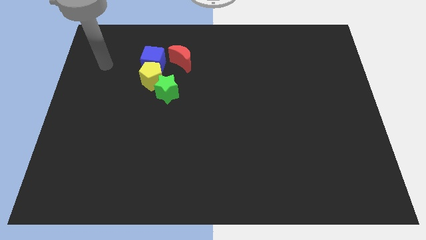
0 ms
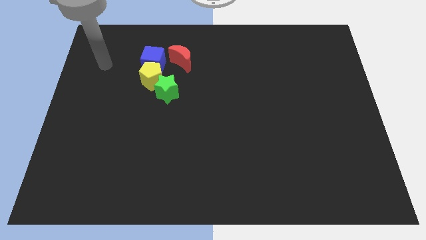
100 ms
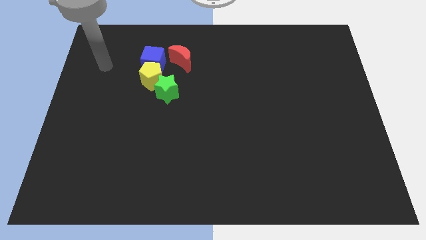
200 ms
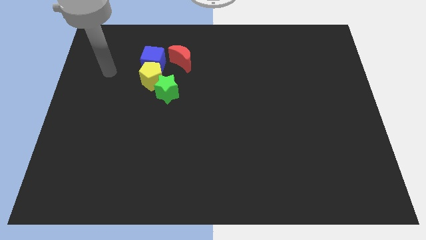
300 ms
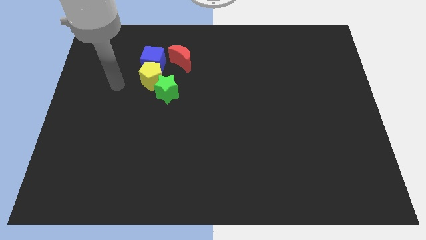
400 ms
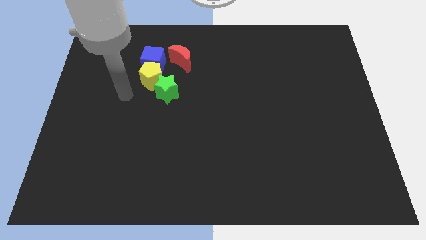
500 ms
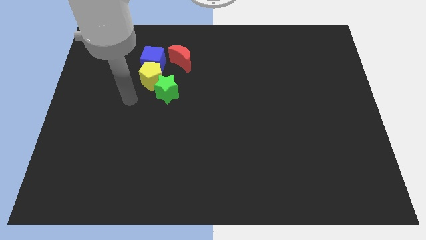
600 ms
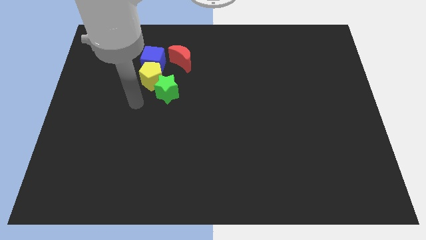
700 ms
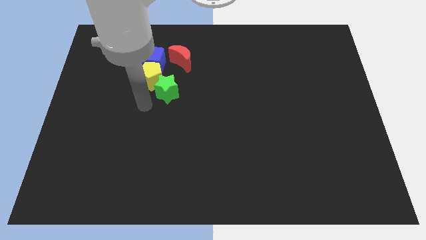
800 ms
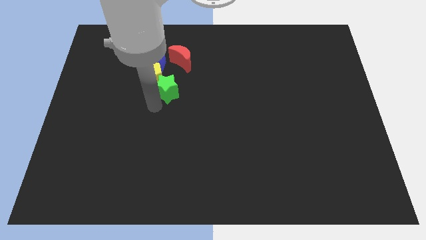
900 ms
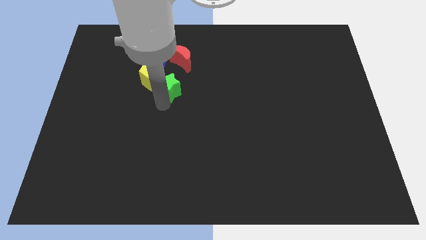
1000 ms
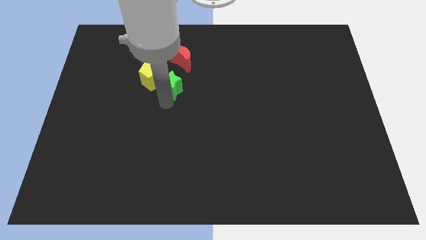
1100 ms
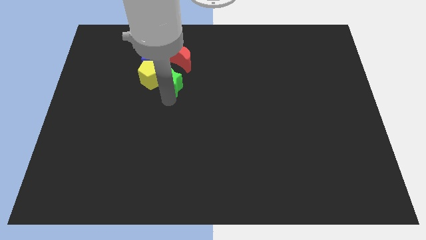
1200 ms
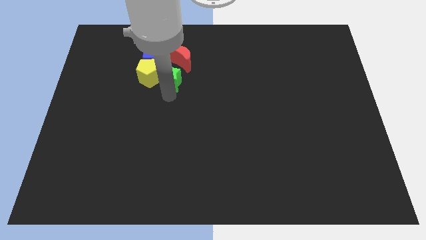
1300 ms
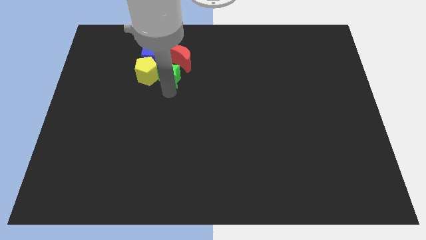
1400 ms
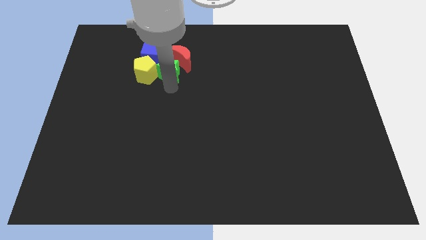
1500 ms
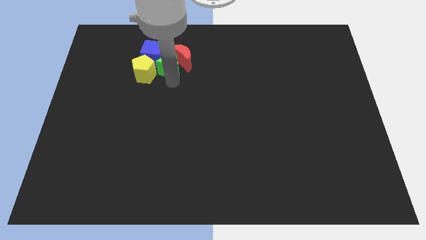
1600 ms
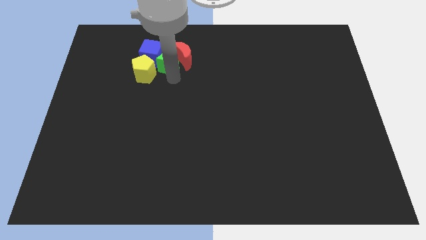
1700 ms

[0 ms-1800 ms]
move the green block to the red moon

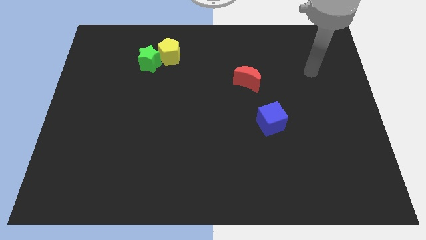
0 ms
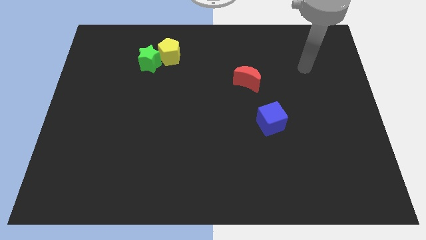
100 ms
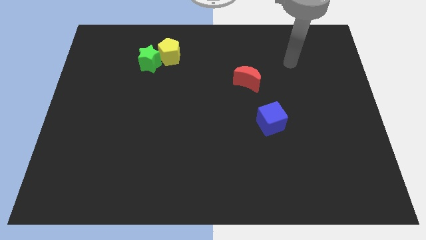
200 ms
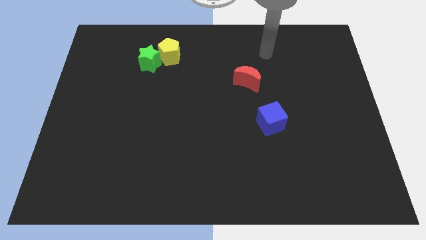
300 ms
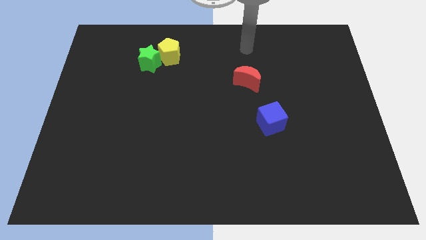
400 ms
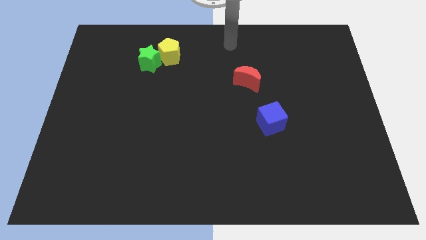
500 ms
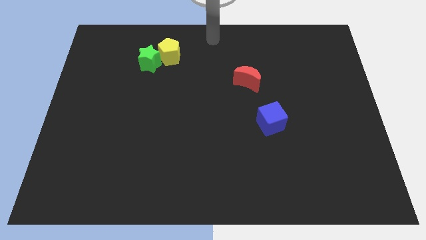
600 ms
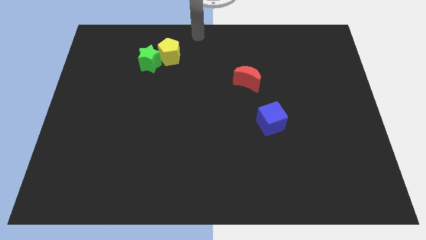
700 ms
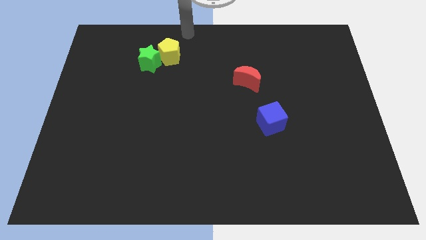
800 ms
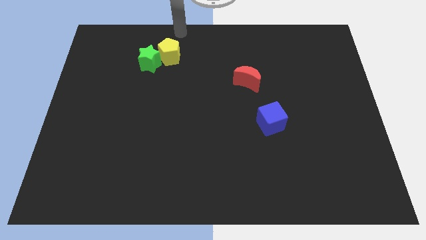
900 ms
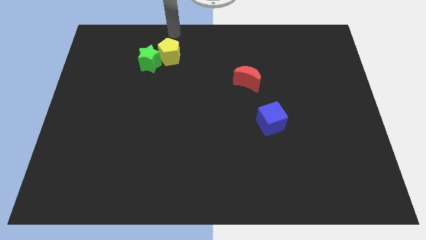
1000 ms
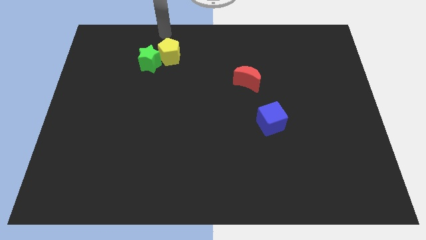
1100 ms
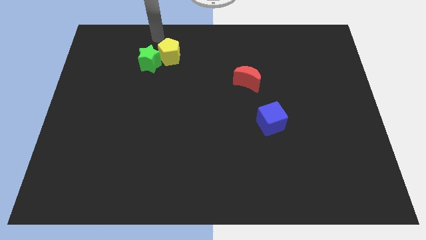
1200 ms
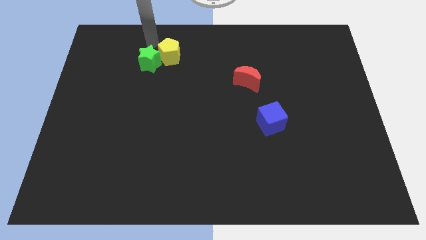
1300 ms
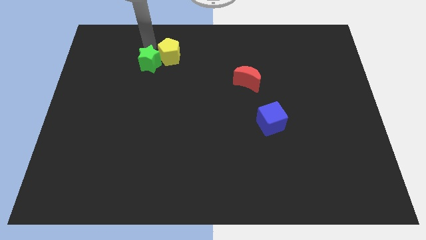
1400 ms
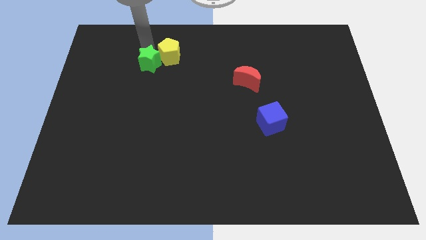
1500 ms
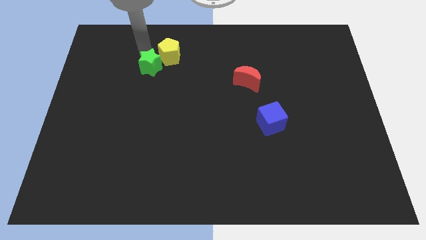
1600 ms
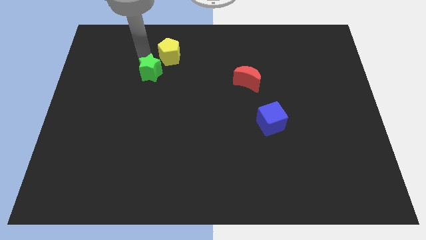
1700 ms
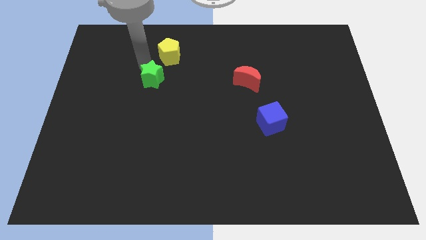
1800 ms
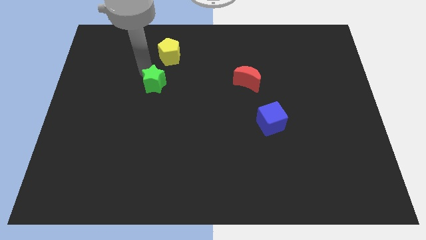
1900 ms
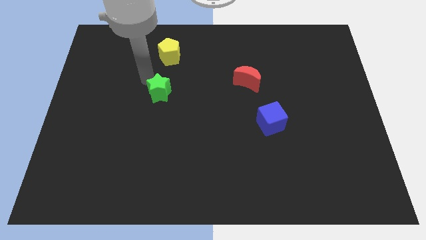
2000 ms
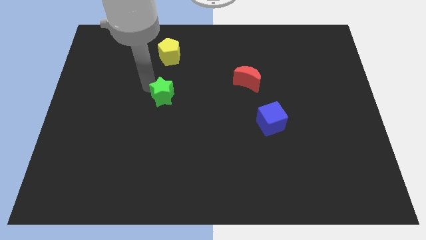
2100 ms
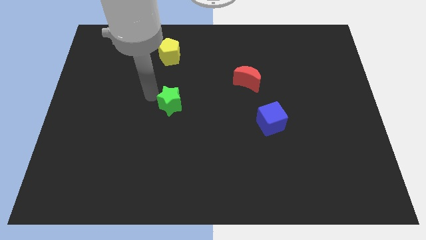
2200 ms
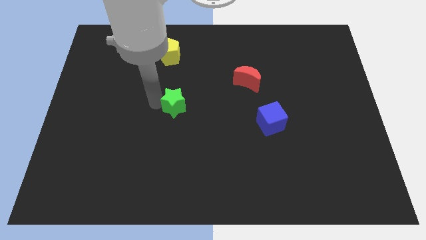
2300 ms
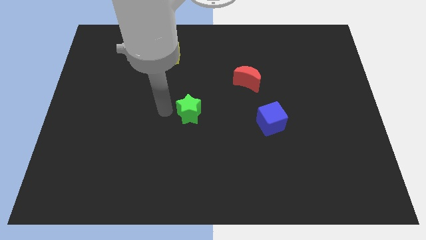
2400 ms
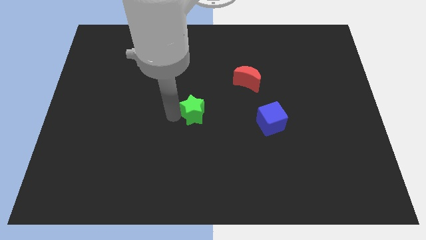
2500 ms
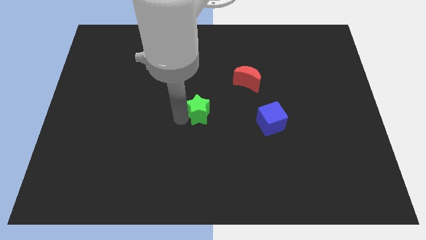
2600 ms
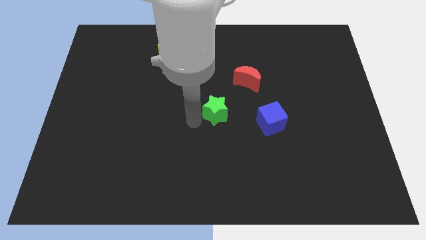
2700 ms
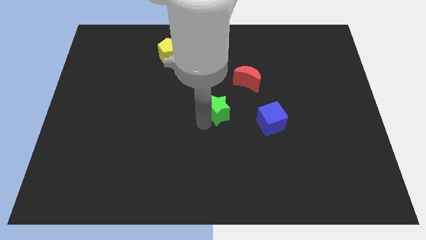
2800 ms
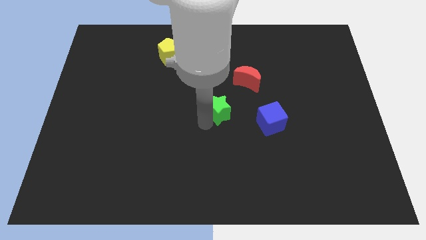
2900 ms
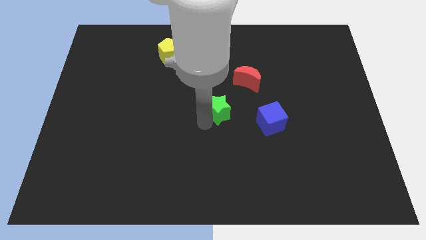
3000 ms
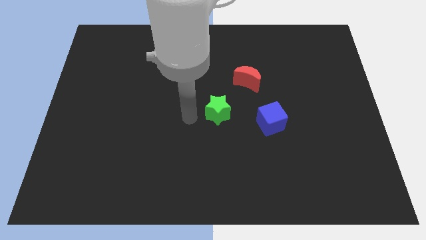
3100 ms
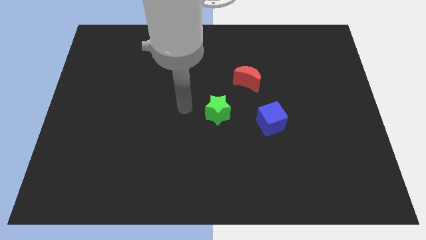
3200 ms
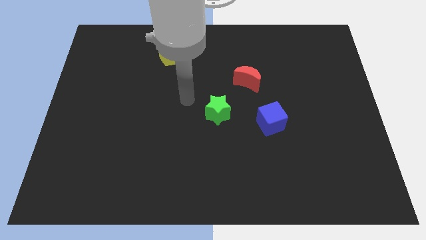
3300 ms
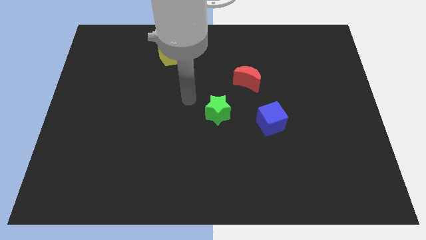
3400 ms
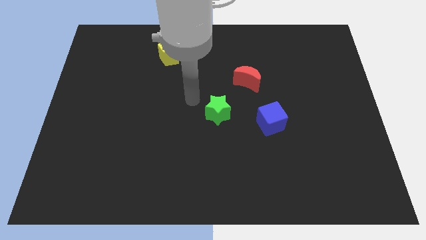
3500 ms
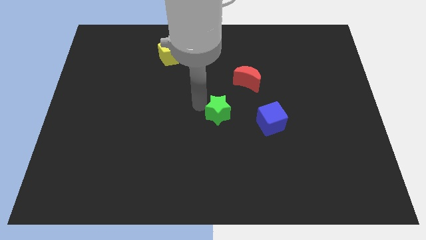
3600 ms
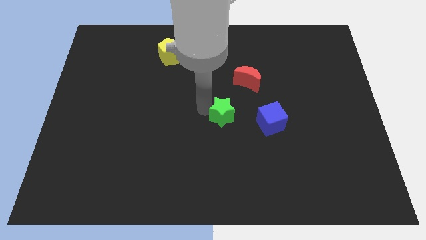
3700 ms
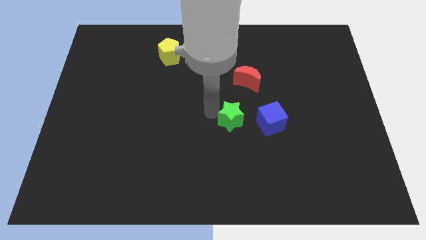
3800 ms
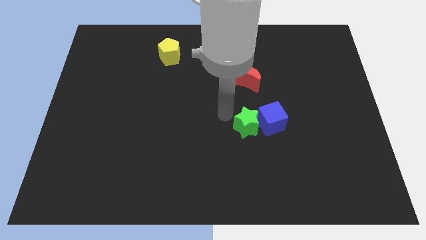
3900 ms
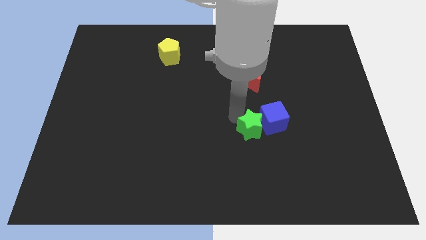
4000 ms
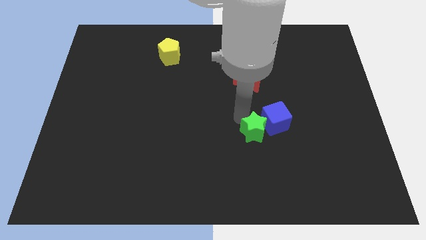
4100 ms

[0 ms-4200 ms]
move the green star close to the blue block

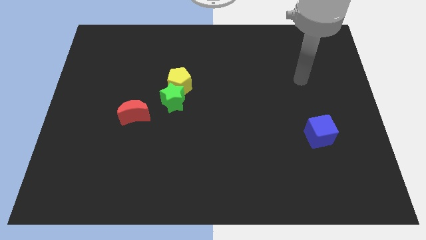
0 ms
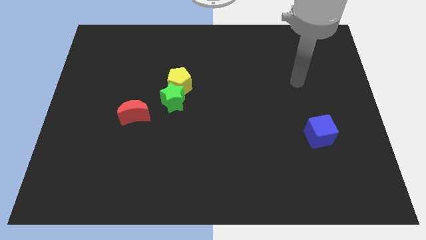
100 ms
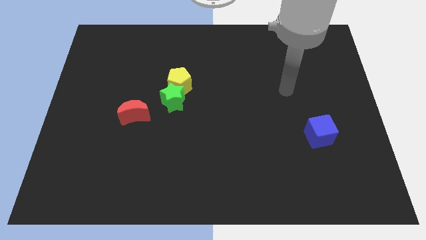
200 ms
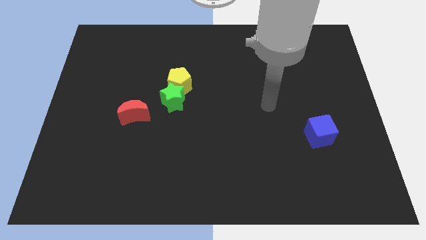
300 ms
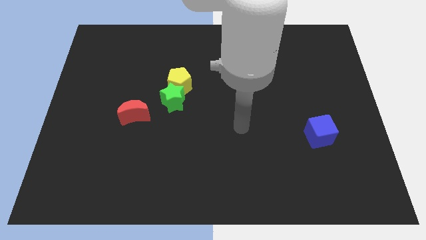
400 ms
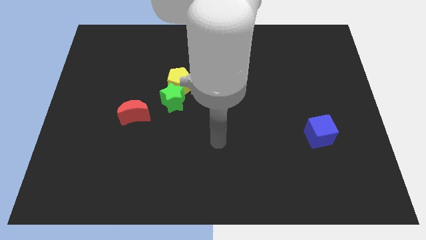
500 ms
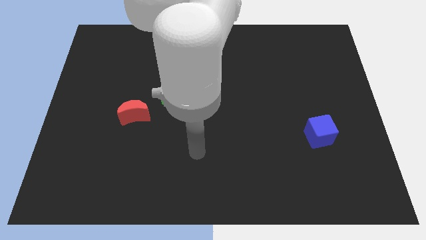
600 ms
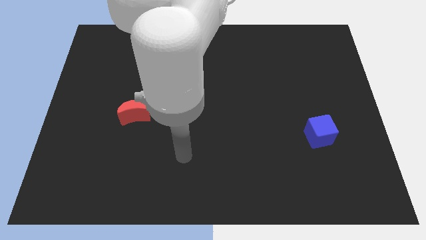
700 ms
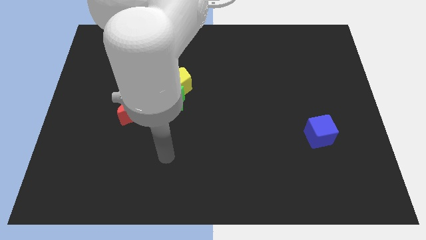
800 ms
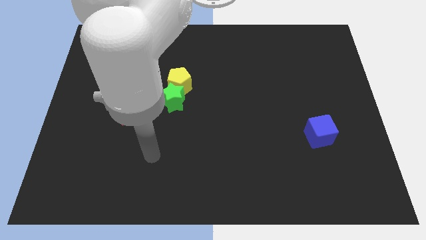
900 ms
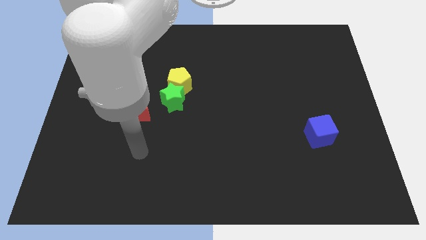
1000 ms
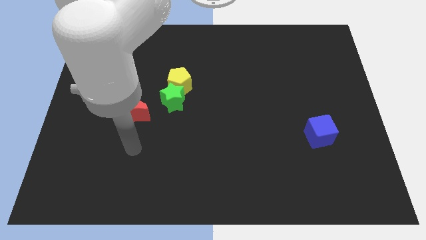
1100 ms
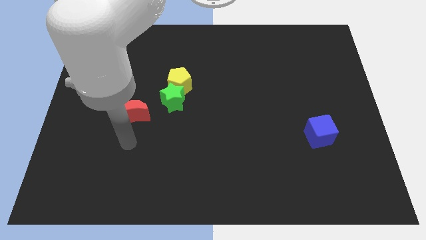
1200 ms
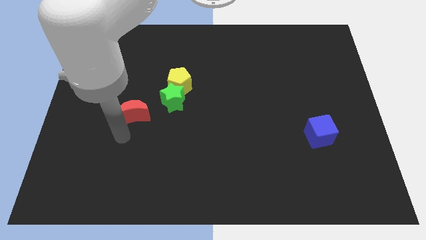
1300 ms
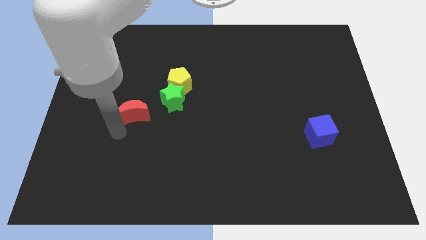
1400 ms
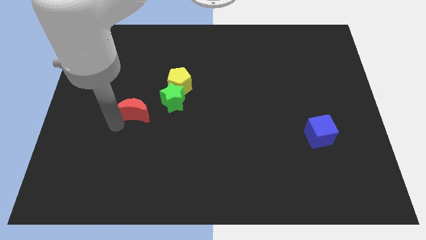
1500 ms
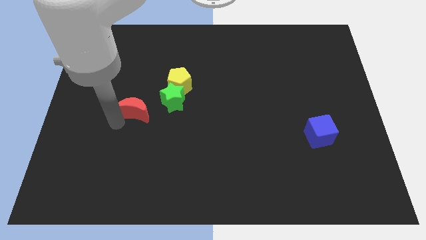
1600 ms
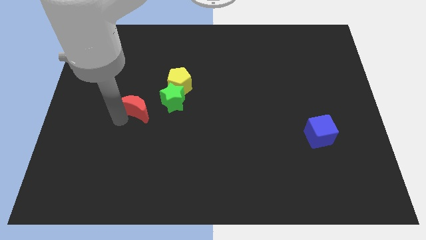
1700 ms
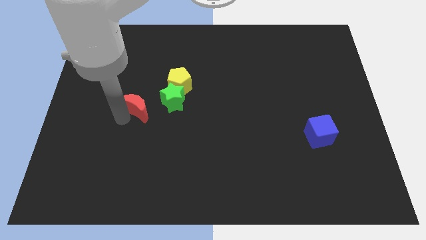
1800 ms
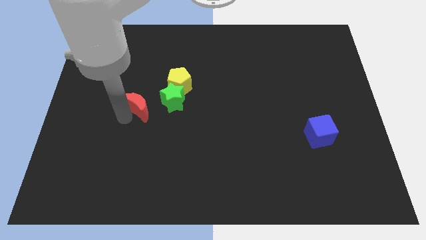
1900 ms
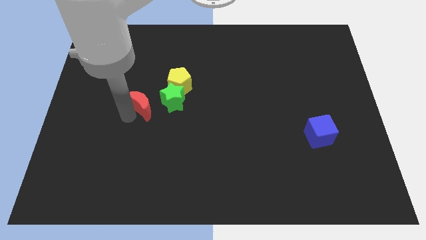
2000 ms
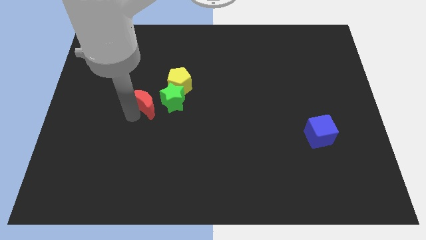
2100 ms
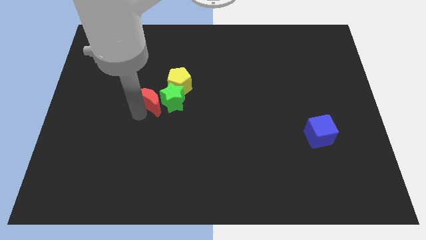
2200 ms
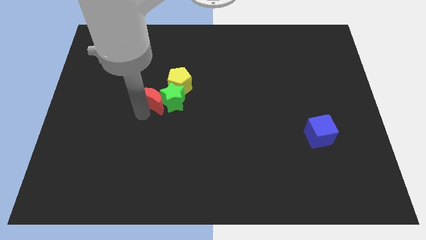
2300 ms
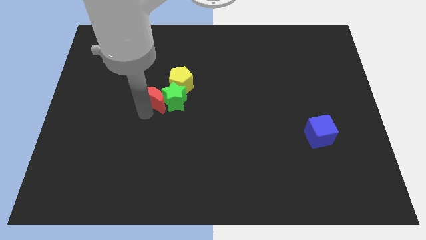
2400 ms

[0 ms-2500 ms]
put the moon to the star
